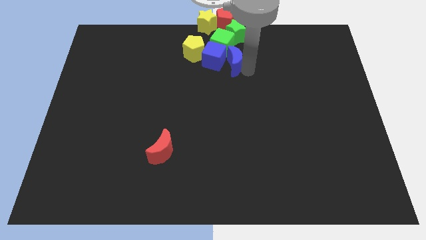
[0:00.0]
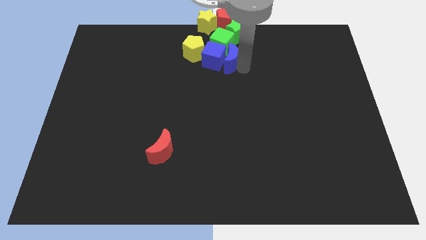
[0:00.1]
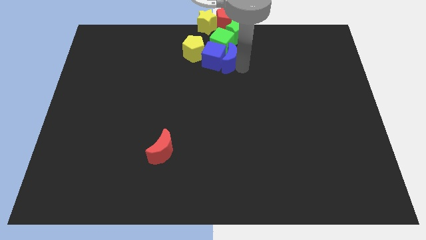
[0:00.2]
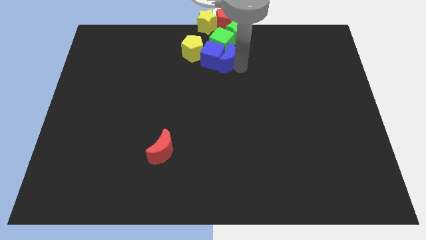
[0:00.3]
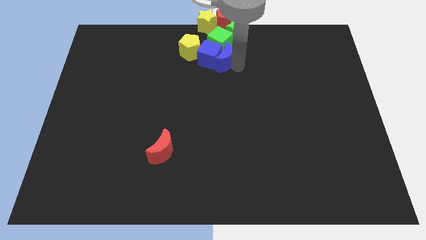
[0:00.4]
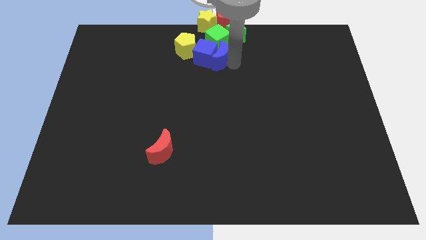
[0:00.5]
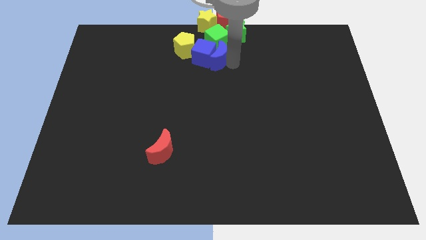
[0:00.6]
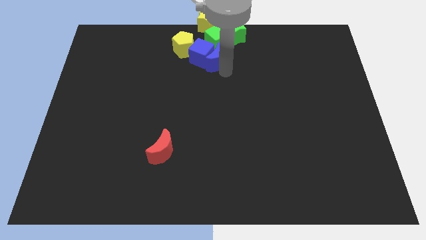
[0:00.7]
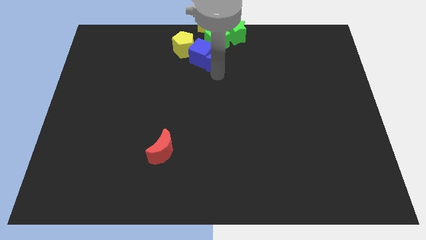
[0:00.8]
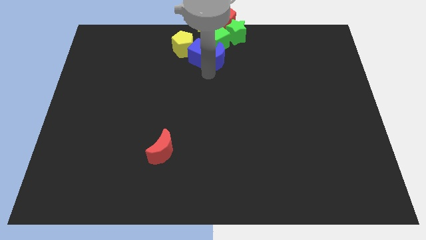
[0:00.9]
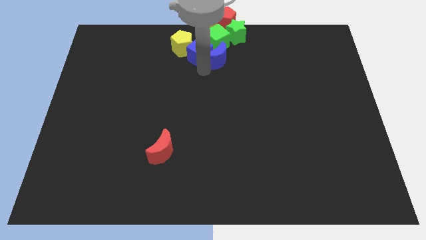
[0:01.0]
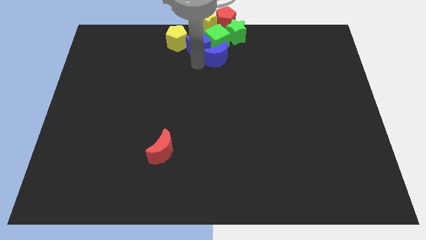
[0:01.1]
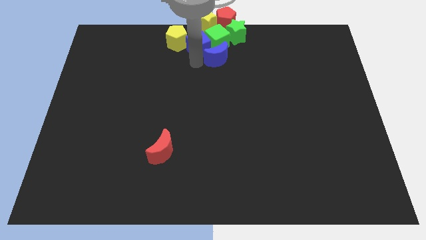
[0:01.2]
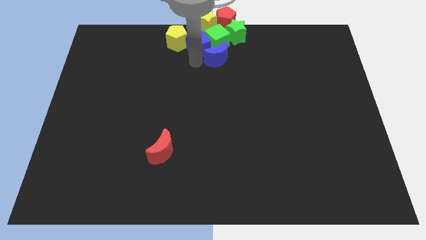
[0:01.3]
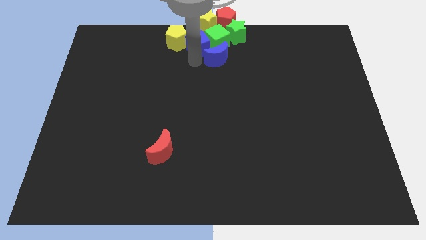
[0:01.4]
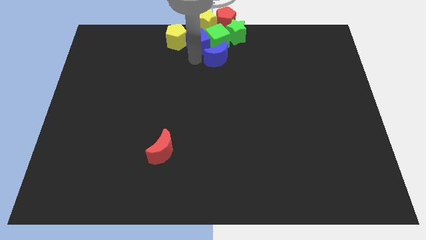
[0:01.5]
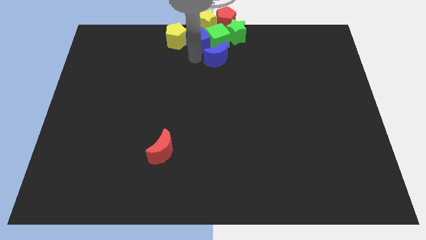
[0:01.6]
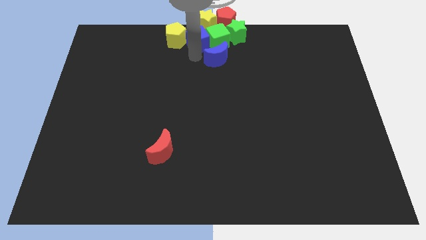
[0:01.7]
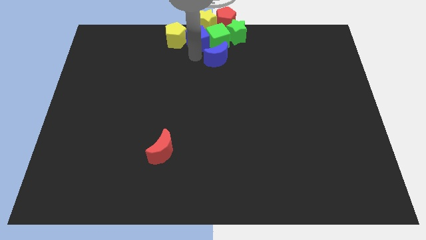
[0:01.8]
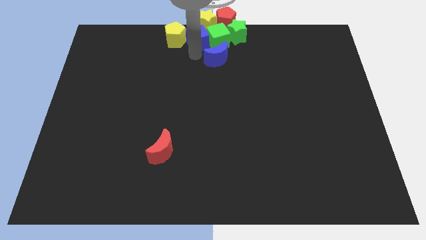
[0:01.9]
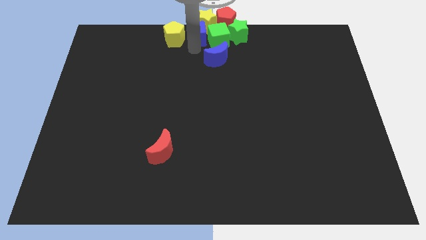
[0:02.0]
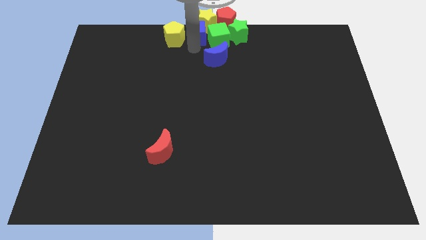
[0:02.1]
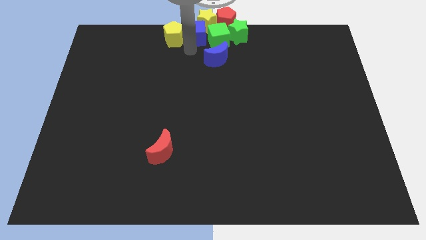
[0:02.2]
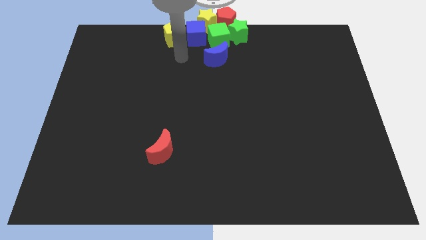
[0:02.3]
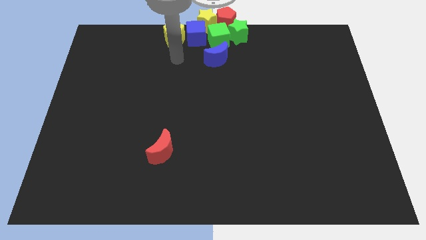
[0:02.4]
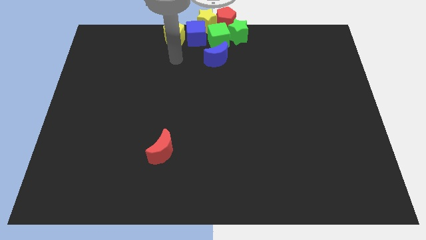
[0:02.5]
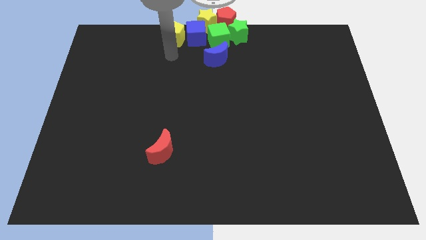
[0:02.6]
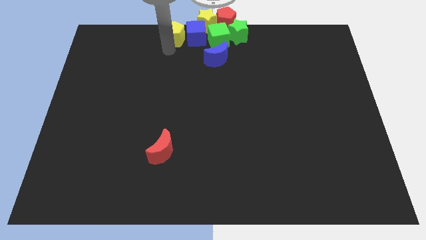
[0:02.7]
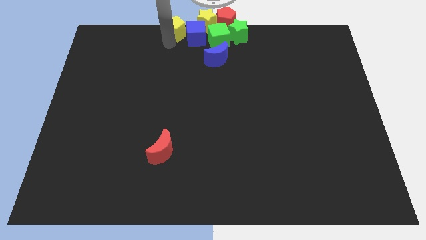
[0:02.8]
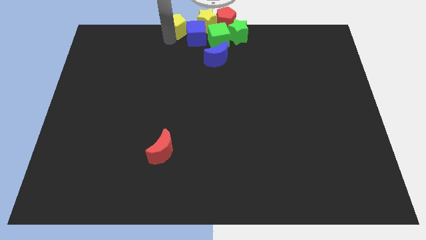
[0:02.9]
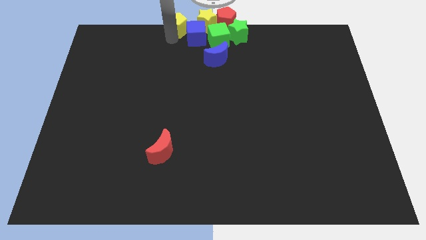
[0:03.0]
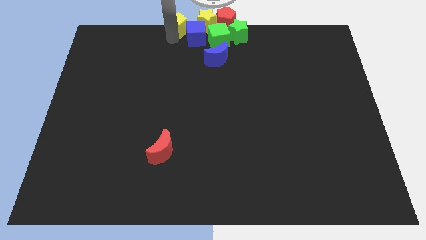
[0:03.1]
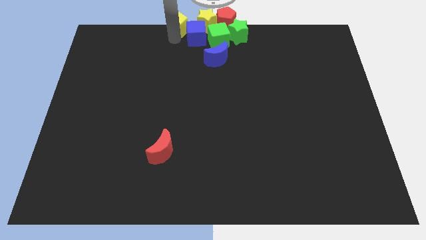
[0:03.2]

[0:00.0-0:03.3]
slightly move the blue crescent blue cubeyellow pentagon towards top

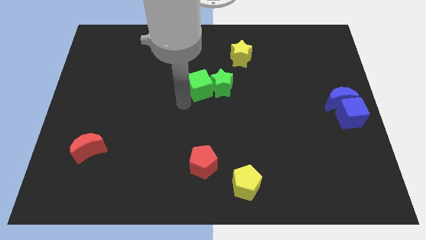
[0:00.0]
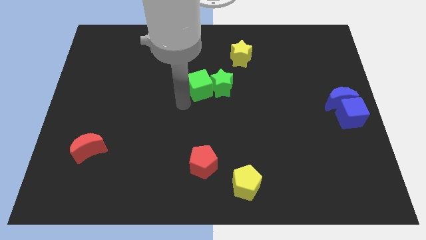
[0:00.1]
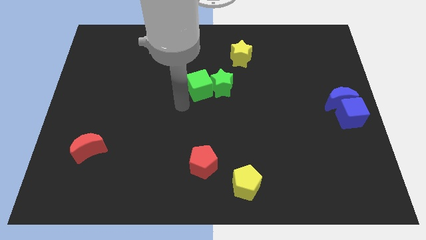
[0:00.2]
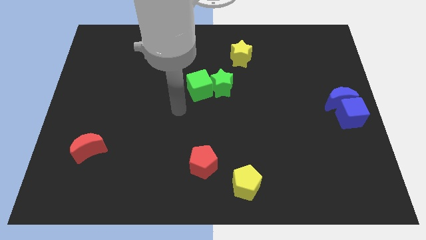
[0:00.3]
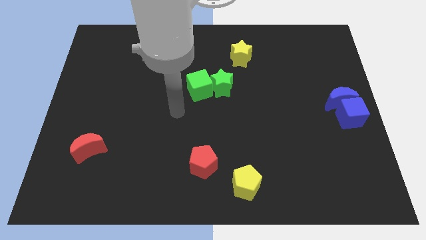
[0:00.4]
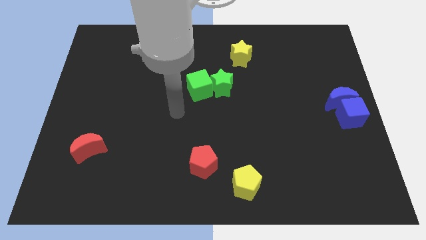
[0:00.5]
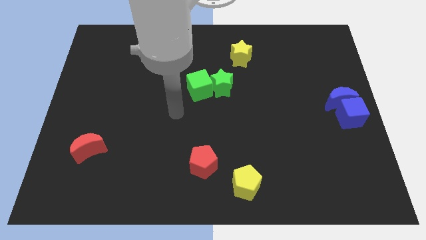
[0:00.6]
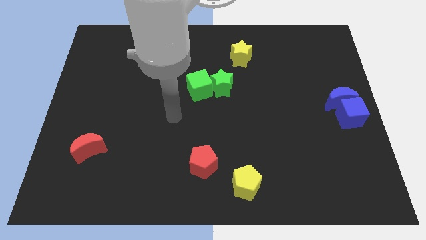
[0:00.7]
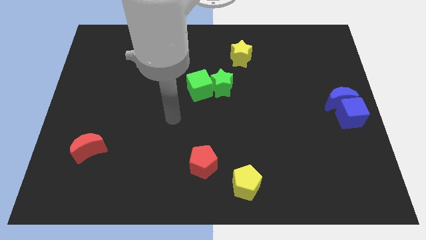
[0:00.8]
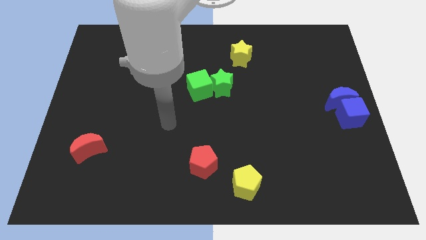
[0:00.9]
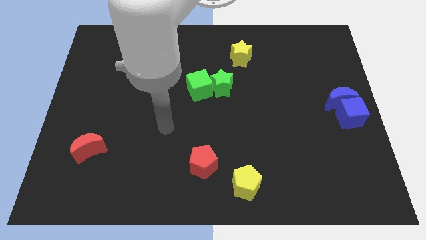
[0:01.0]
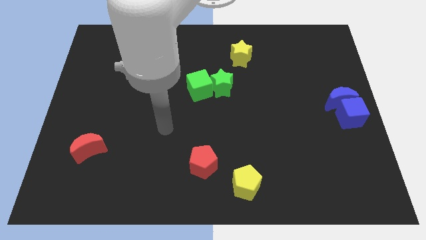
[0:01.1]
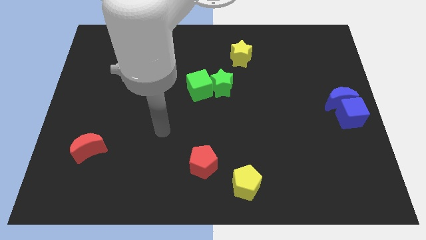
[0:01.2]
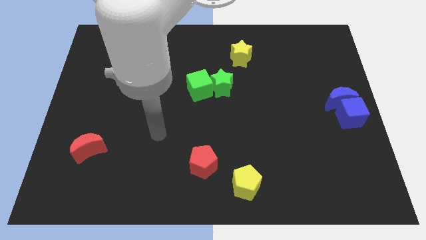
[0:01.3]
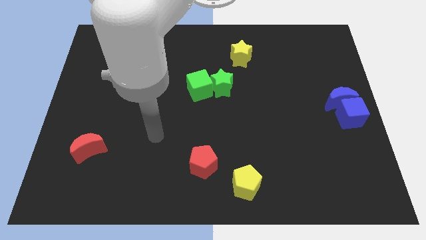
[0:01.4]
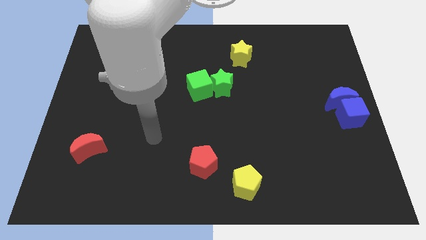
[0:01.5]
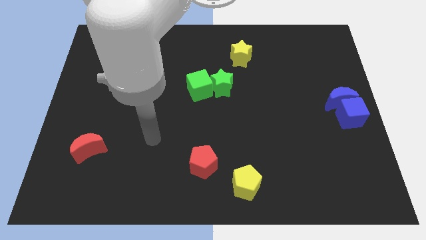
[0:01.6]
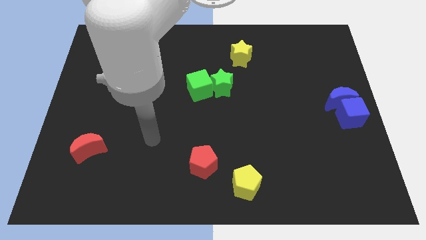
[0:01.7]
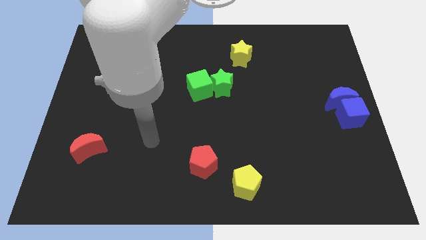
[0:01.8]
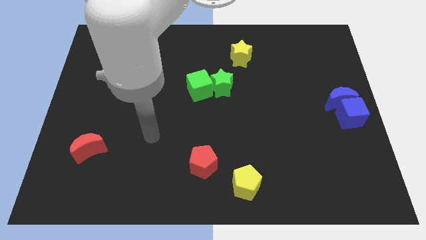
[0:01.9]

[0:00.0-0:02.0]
move your arm away from green cube

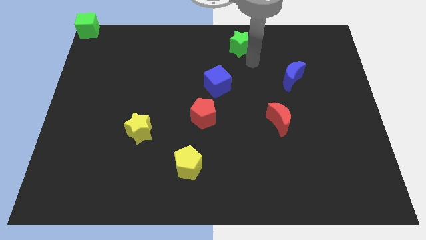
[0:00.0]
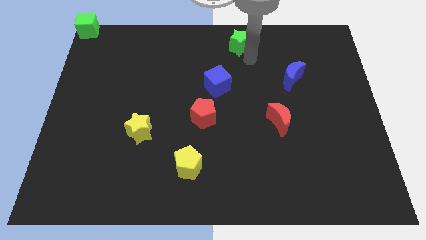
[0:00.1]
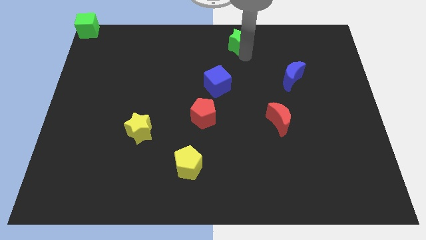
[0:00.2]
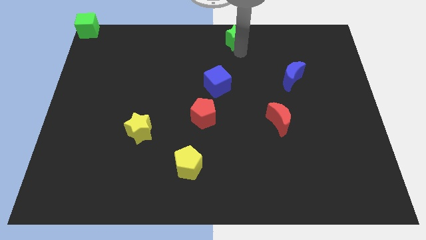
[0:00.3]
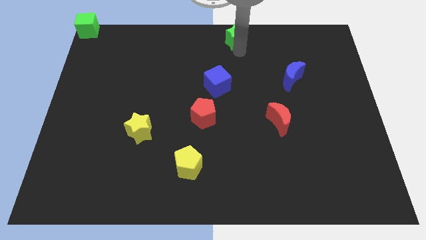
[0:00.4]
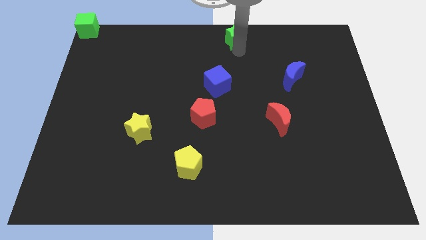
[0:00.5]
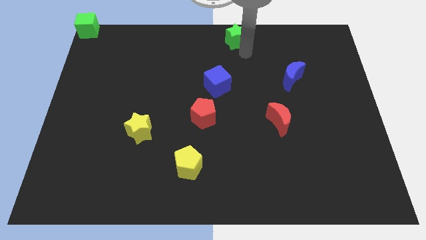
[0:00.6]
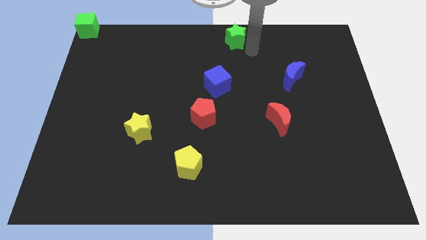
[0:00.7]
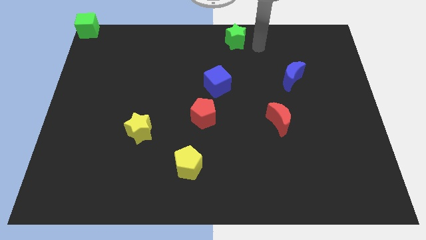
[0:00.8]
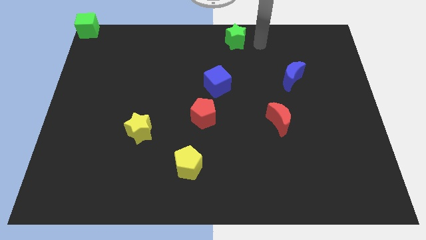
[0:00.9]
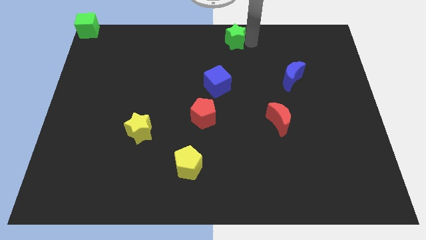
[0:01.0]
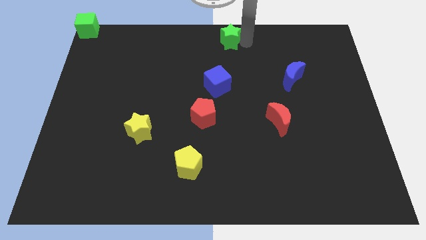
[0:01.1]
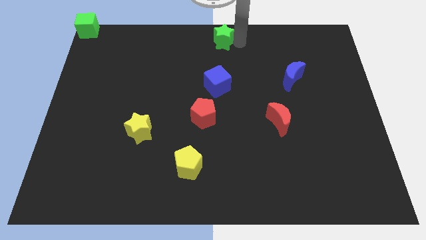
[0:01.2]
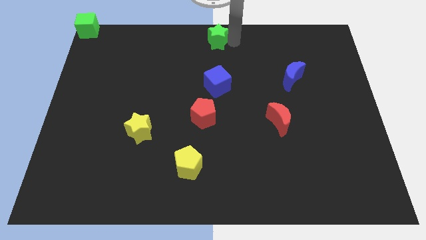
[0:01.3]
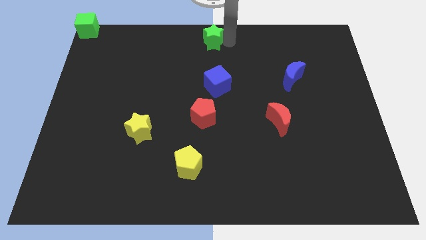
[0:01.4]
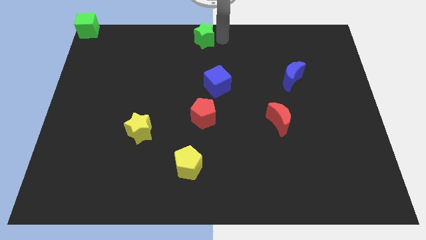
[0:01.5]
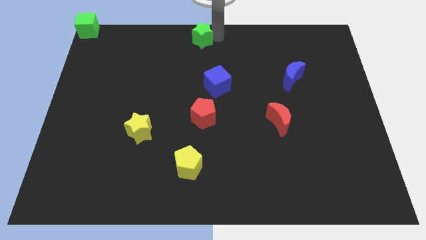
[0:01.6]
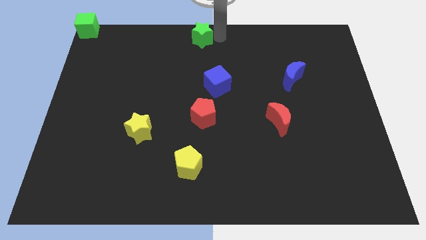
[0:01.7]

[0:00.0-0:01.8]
move the green star to the top center of the table

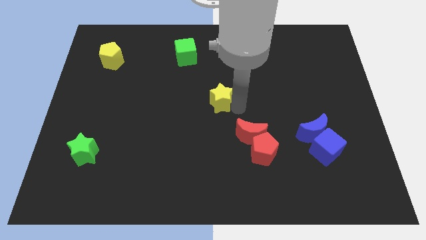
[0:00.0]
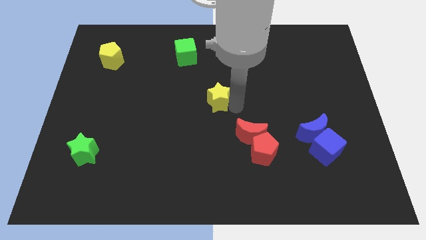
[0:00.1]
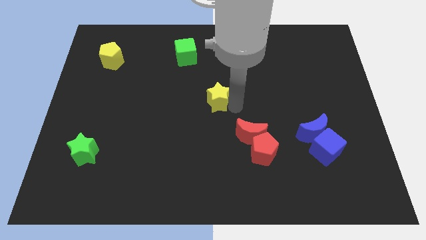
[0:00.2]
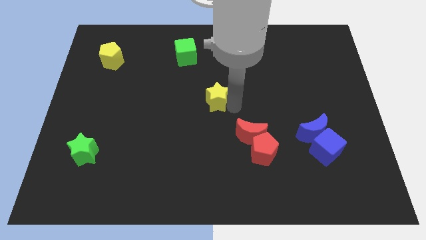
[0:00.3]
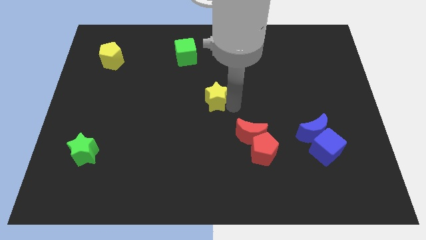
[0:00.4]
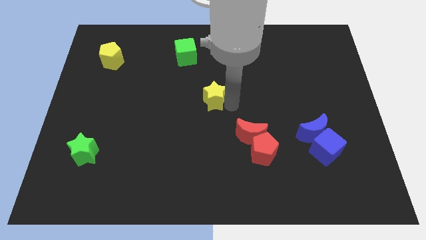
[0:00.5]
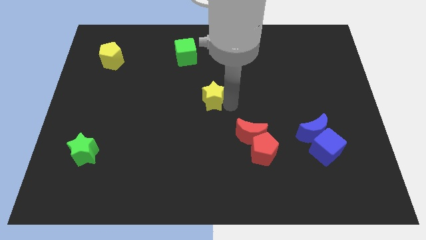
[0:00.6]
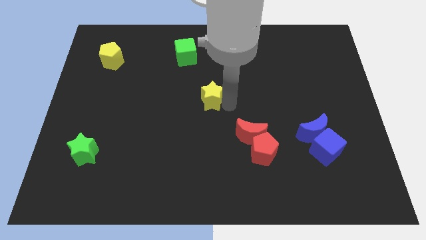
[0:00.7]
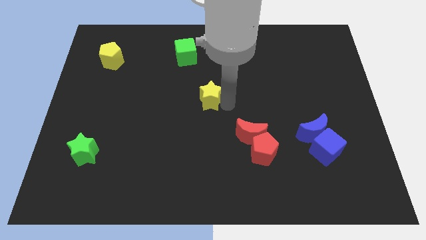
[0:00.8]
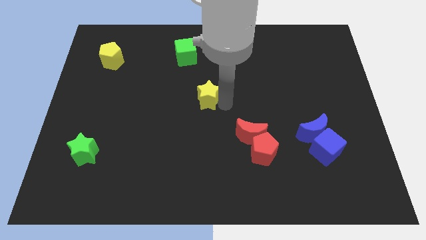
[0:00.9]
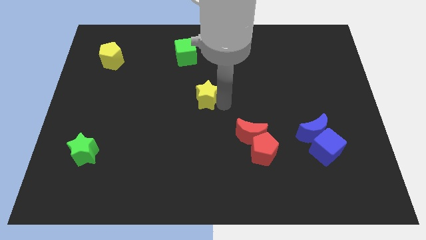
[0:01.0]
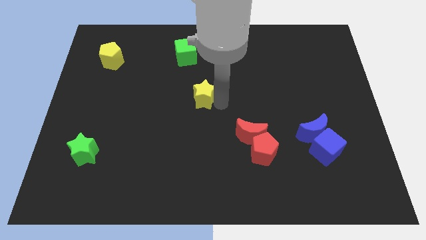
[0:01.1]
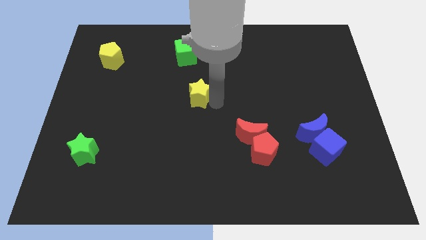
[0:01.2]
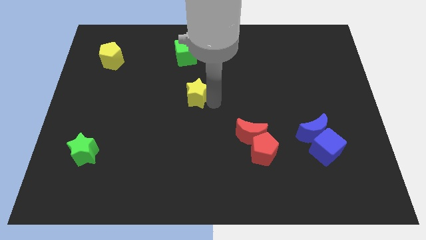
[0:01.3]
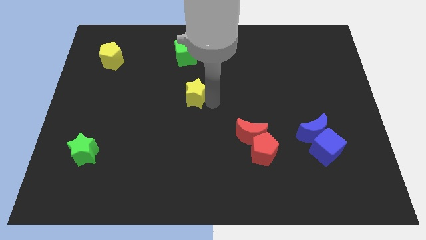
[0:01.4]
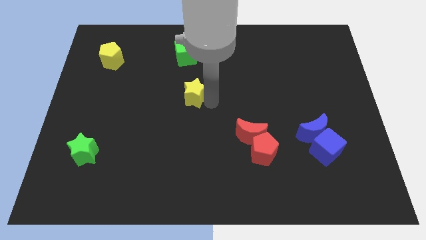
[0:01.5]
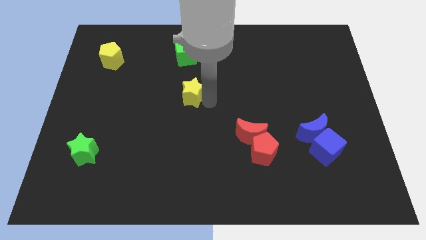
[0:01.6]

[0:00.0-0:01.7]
push yellow star below green cube

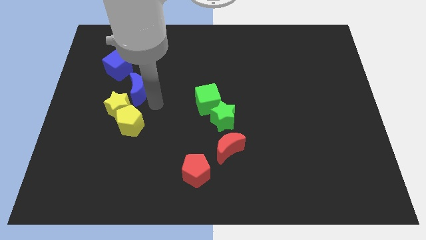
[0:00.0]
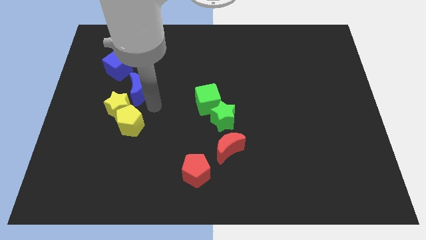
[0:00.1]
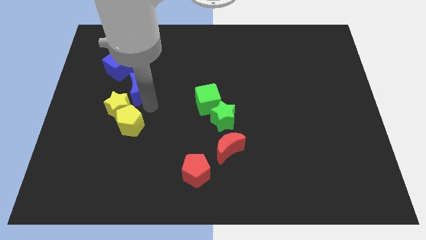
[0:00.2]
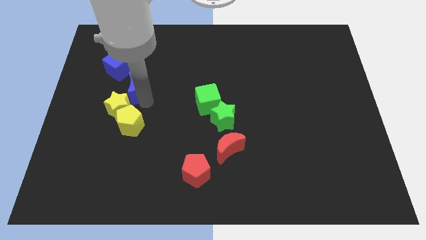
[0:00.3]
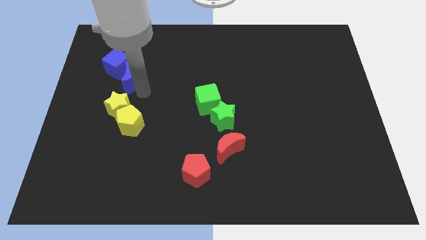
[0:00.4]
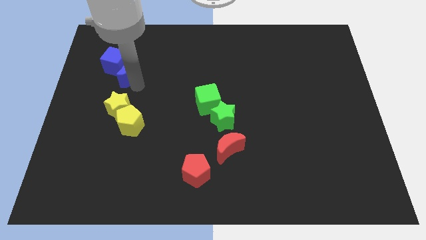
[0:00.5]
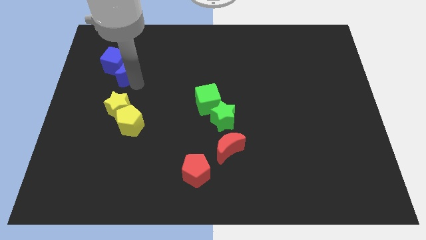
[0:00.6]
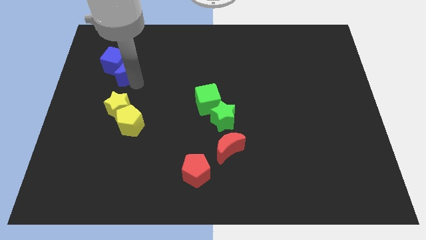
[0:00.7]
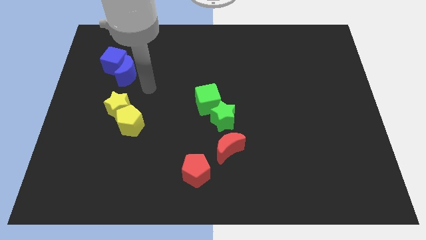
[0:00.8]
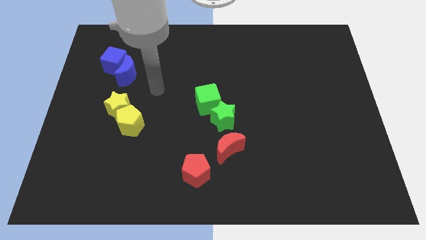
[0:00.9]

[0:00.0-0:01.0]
push the blue crescent into the blue cube
